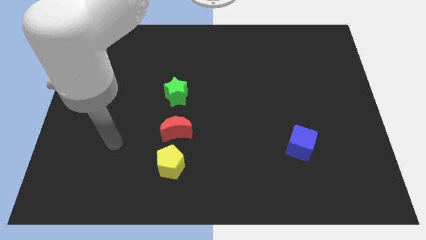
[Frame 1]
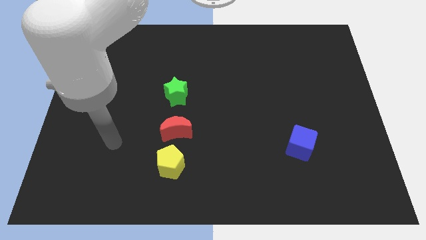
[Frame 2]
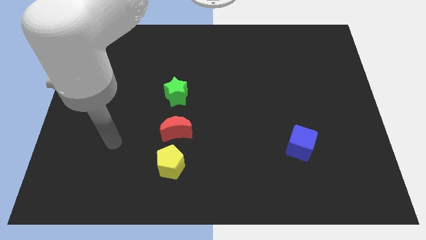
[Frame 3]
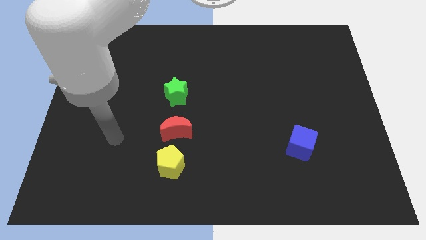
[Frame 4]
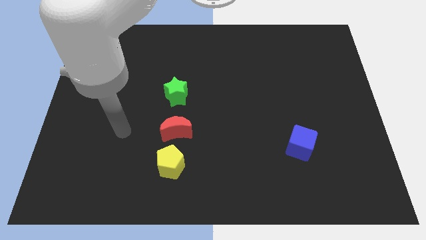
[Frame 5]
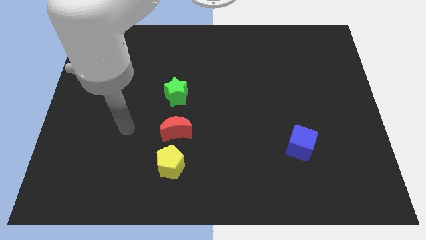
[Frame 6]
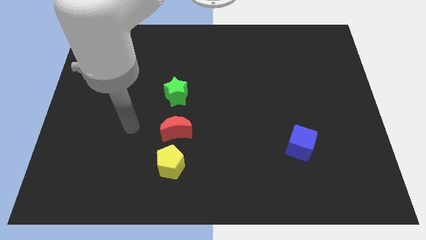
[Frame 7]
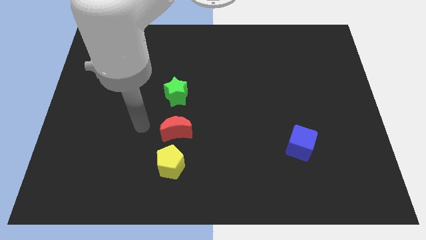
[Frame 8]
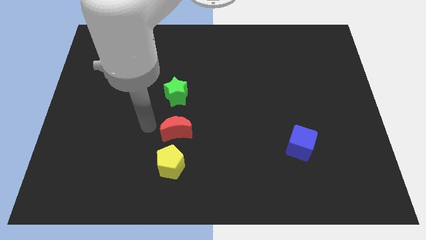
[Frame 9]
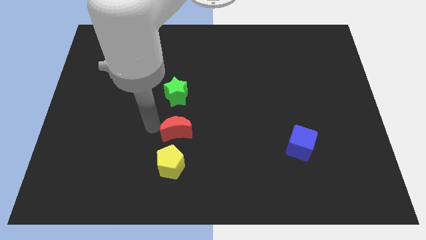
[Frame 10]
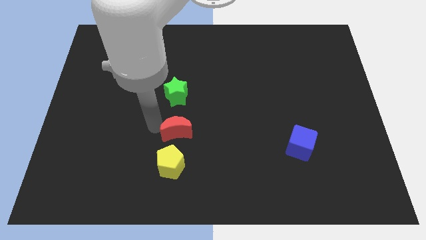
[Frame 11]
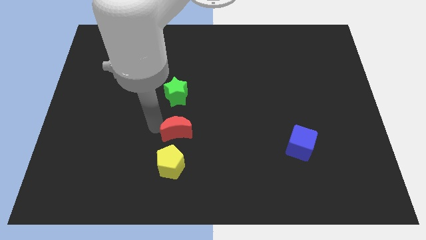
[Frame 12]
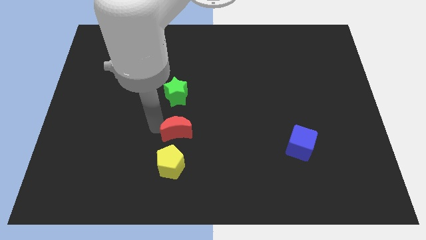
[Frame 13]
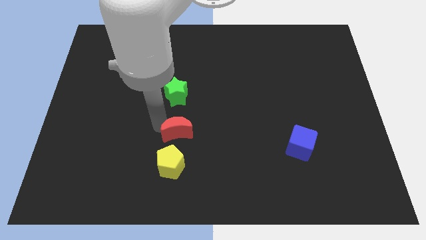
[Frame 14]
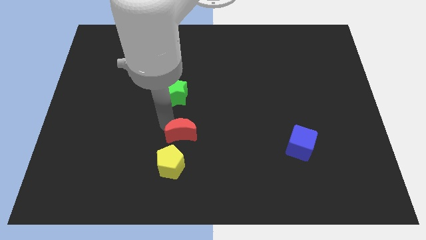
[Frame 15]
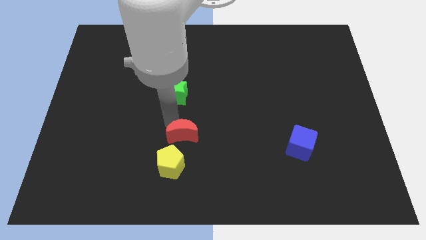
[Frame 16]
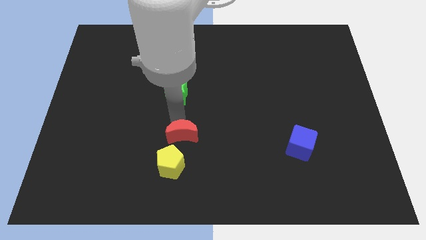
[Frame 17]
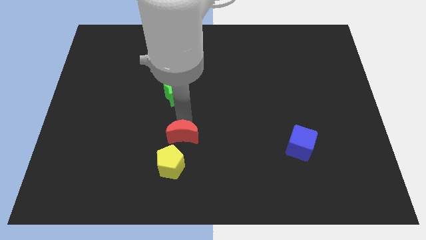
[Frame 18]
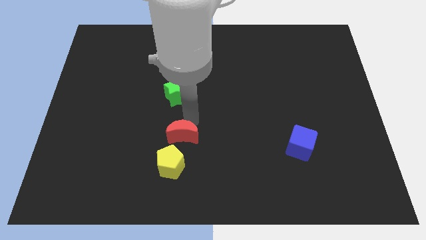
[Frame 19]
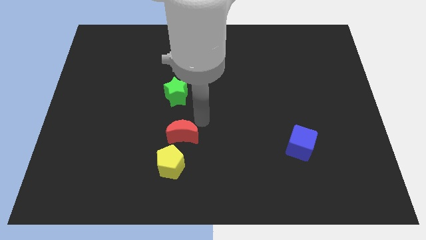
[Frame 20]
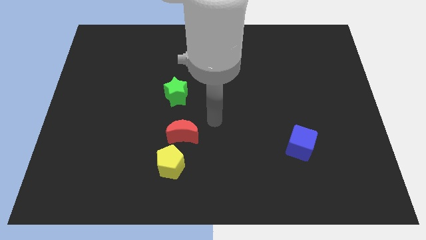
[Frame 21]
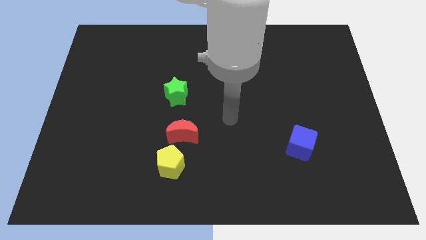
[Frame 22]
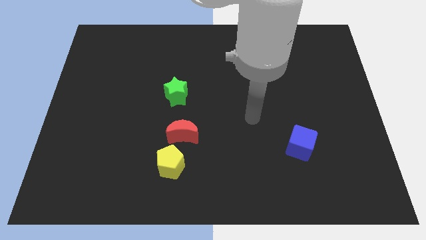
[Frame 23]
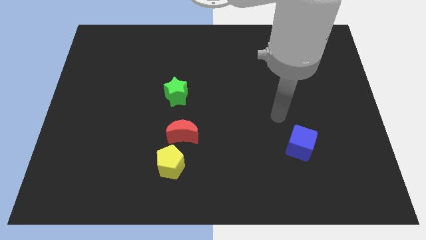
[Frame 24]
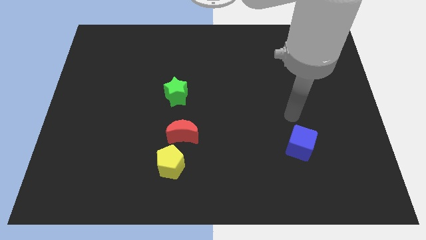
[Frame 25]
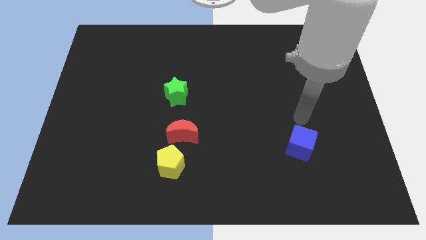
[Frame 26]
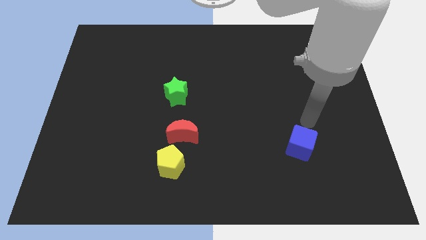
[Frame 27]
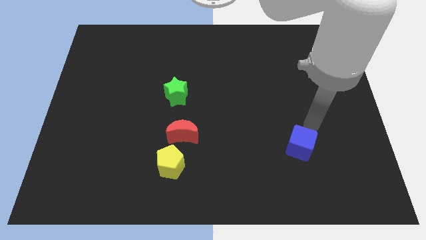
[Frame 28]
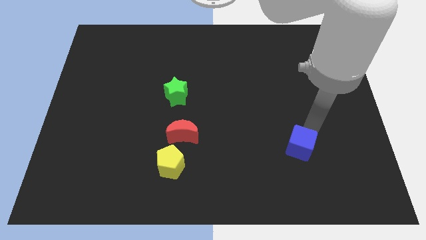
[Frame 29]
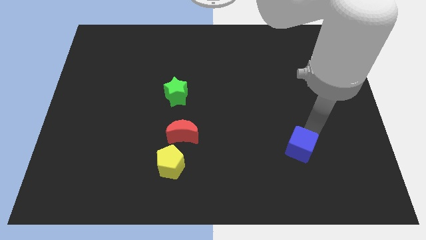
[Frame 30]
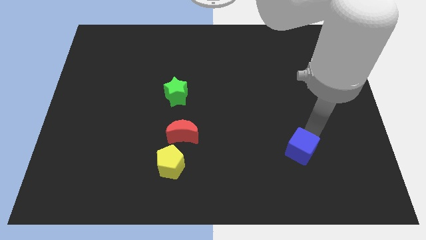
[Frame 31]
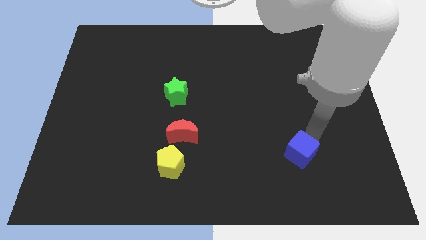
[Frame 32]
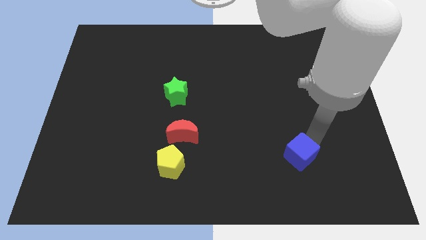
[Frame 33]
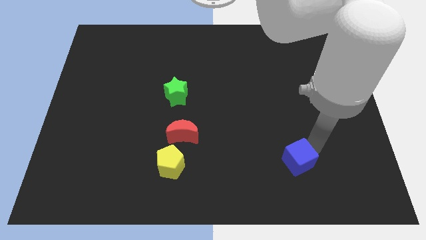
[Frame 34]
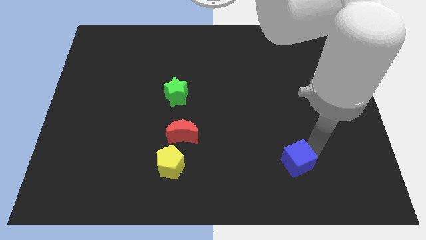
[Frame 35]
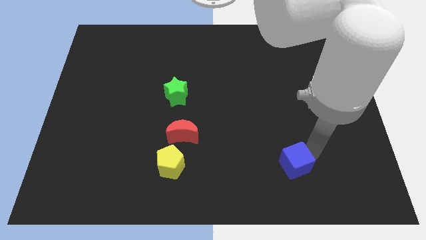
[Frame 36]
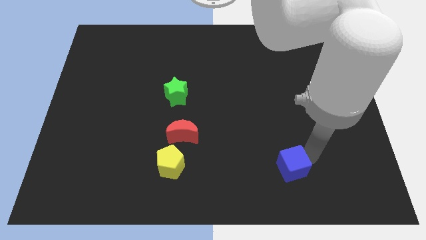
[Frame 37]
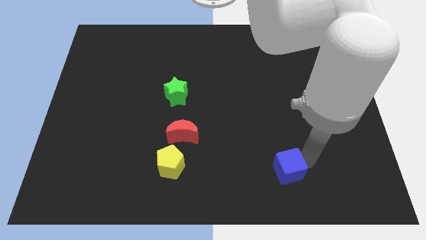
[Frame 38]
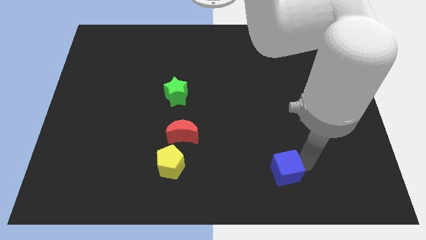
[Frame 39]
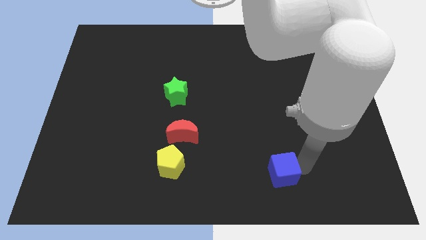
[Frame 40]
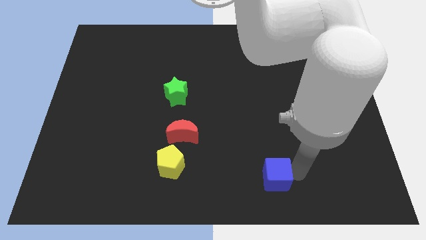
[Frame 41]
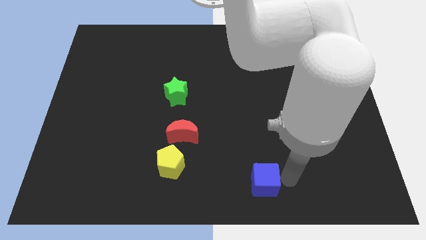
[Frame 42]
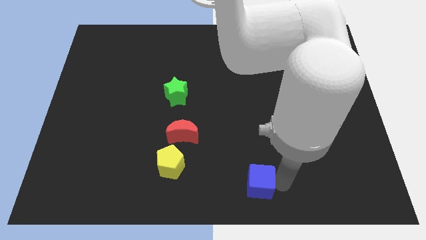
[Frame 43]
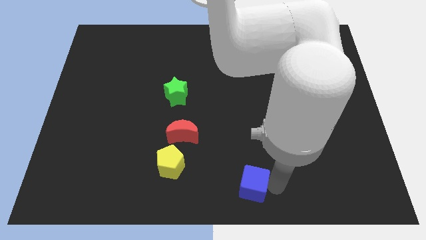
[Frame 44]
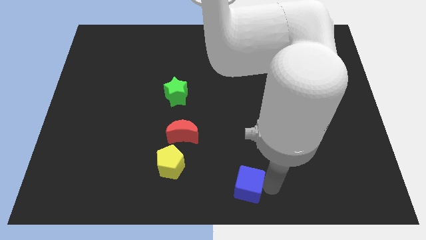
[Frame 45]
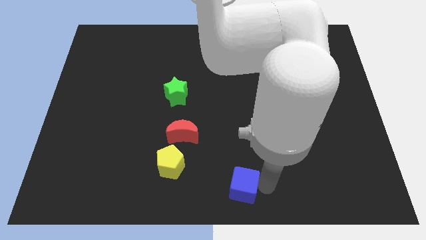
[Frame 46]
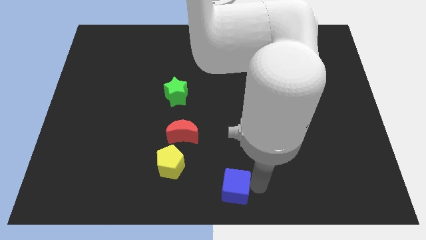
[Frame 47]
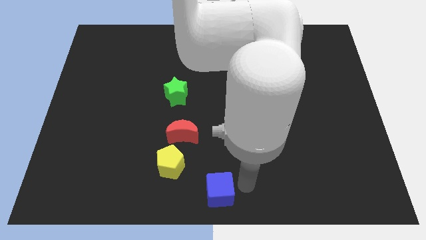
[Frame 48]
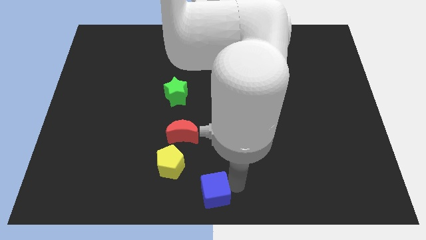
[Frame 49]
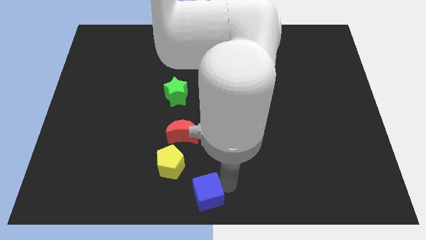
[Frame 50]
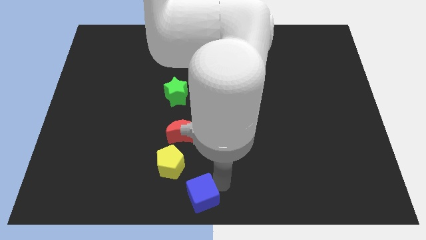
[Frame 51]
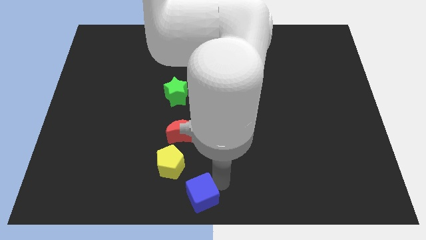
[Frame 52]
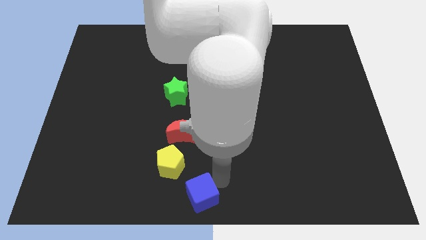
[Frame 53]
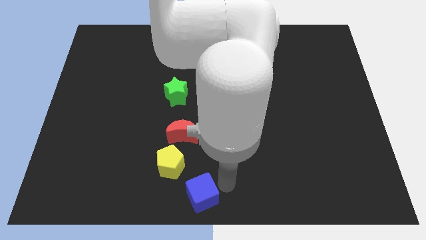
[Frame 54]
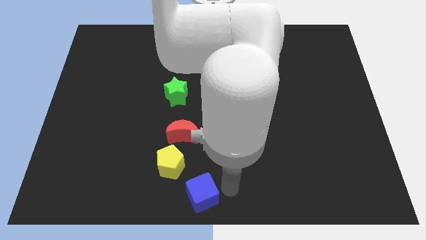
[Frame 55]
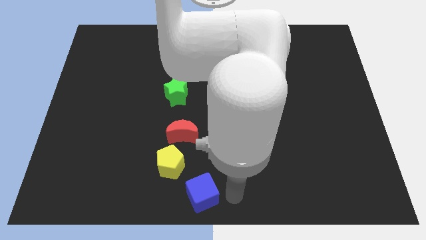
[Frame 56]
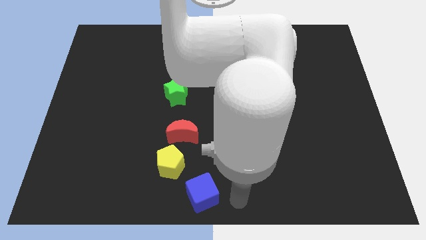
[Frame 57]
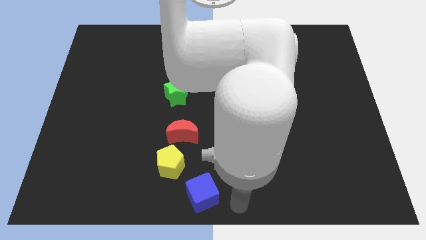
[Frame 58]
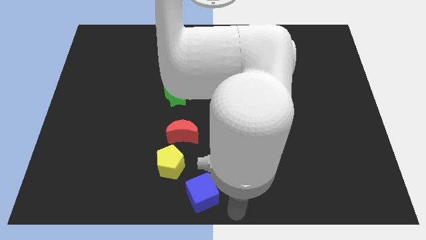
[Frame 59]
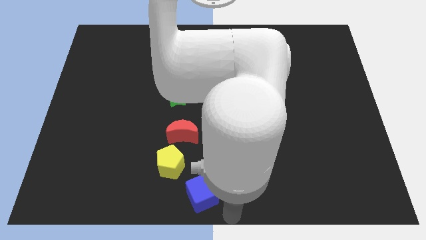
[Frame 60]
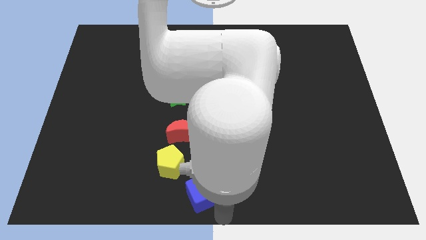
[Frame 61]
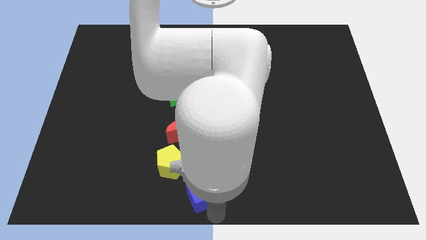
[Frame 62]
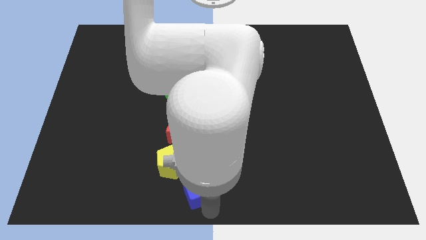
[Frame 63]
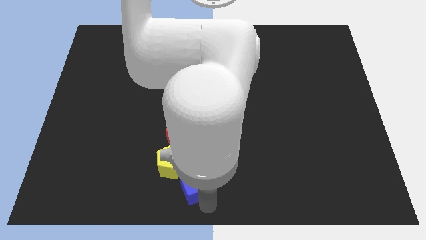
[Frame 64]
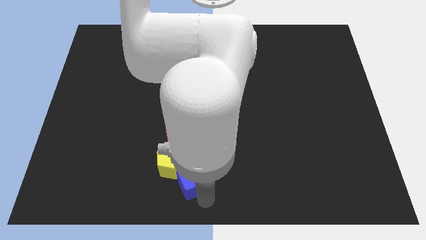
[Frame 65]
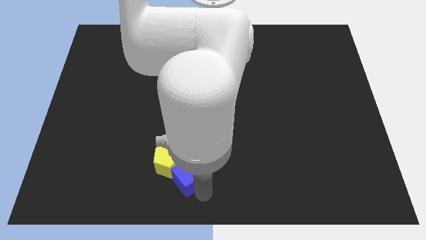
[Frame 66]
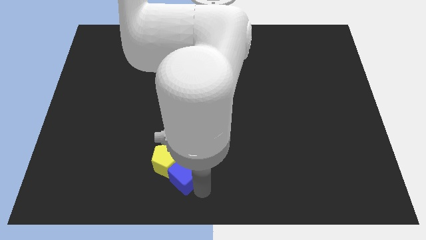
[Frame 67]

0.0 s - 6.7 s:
push the blue cube towards the yellow pentagon

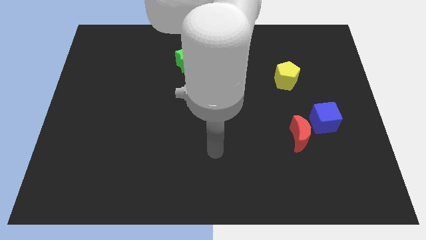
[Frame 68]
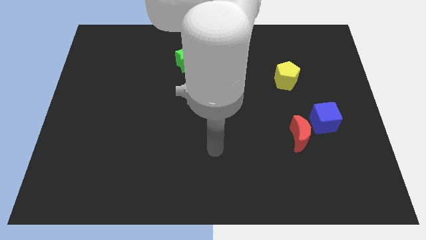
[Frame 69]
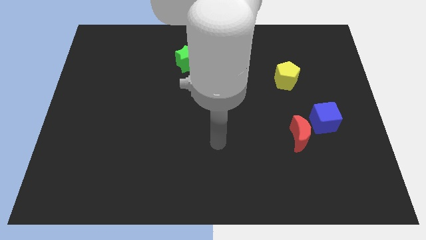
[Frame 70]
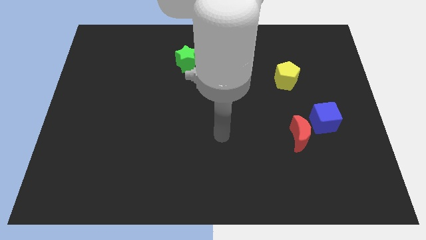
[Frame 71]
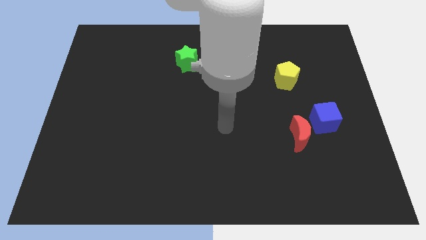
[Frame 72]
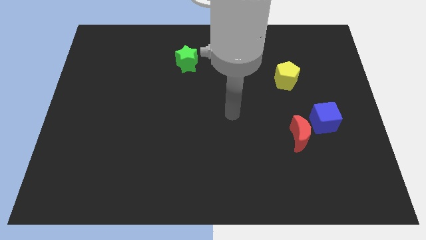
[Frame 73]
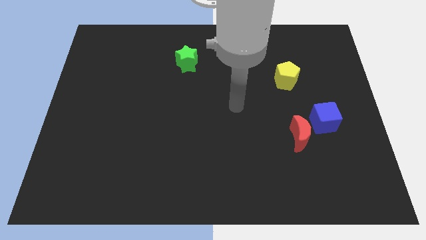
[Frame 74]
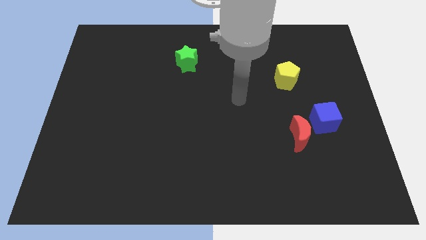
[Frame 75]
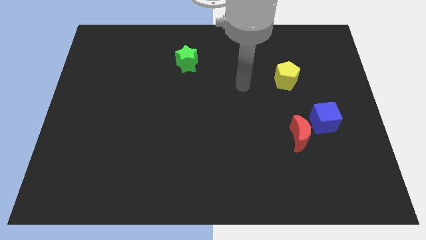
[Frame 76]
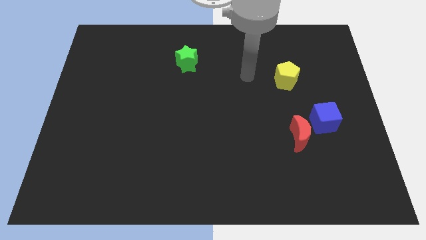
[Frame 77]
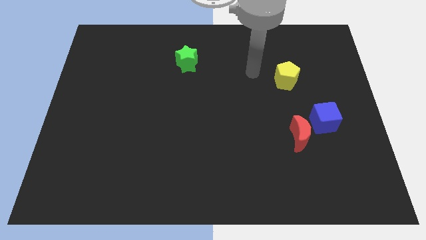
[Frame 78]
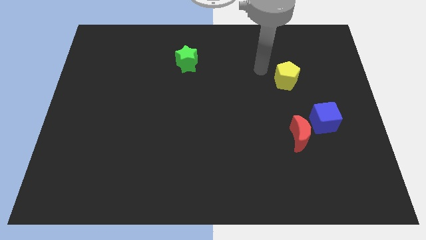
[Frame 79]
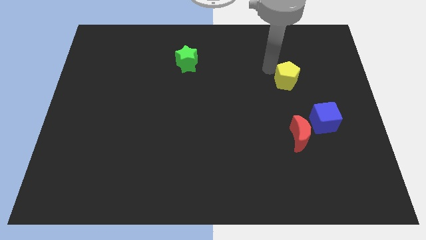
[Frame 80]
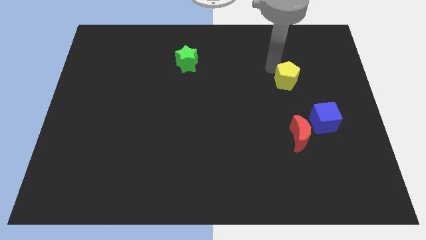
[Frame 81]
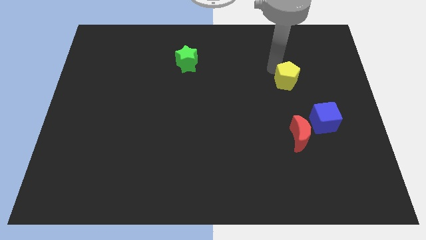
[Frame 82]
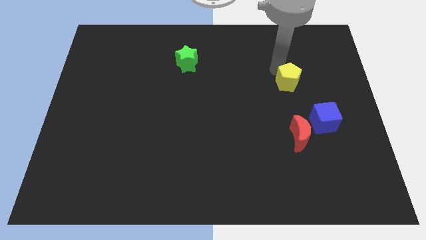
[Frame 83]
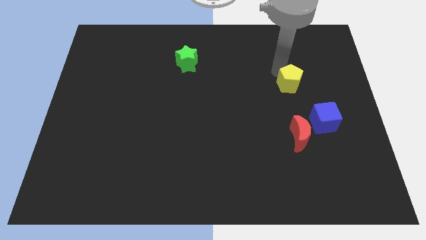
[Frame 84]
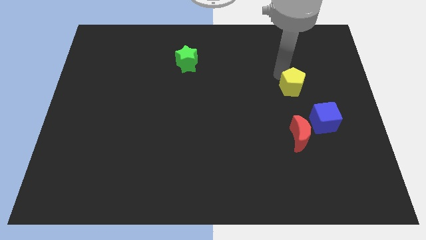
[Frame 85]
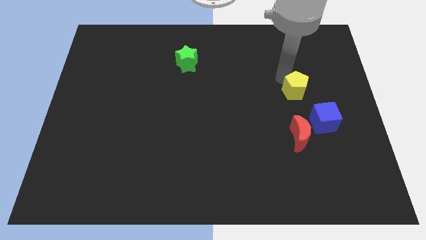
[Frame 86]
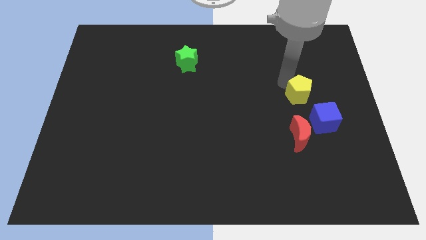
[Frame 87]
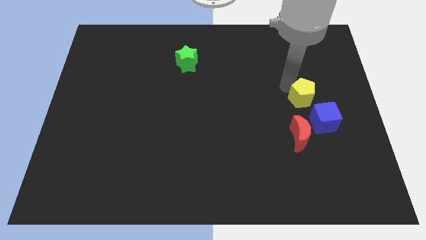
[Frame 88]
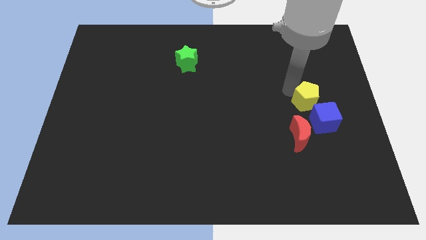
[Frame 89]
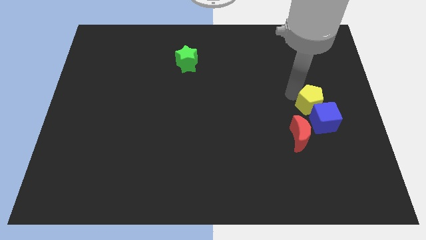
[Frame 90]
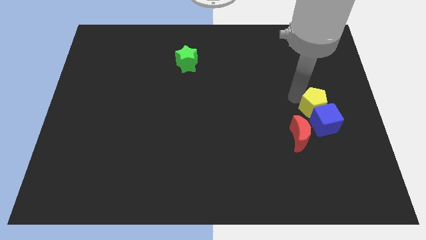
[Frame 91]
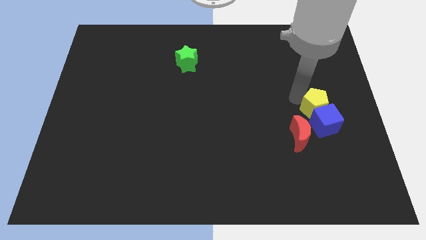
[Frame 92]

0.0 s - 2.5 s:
put the yellow block close to the blue block
